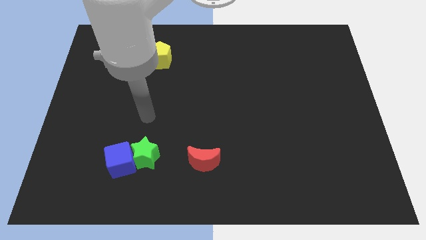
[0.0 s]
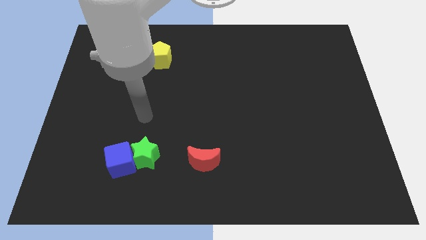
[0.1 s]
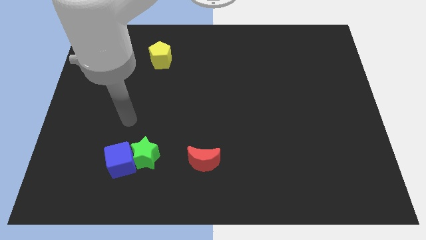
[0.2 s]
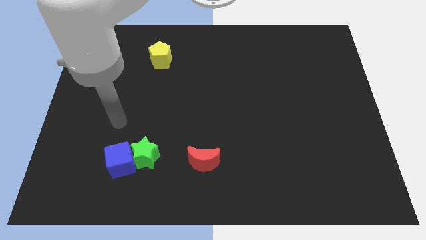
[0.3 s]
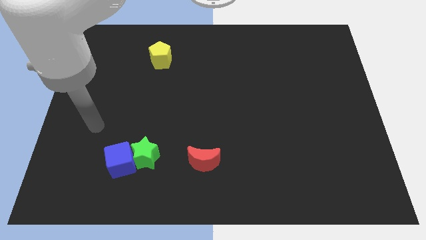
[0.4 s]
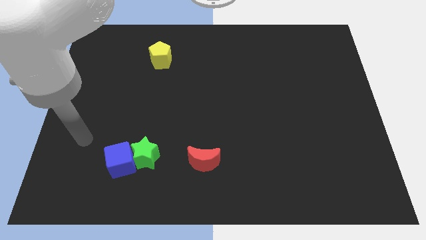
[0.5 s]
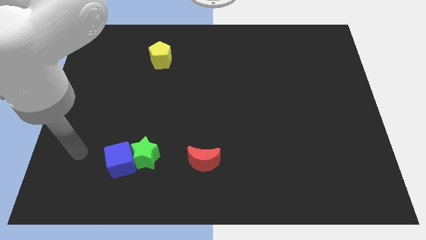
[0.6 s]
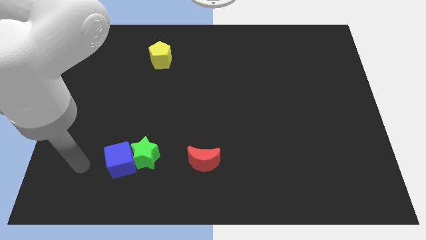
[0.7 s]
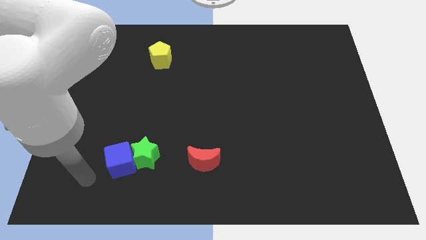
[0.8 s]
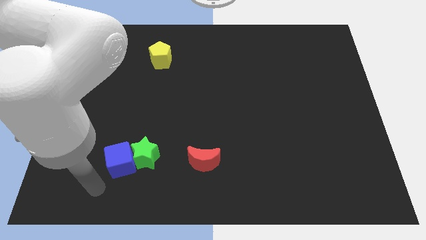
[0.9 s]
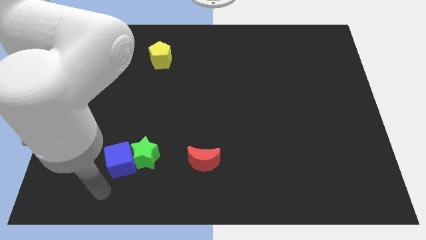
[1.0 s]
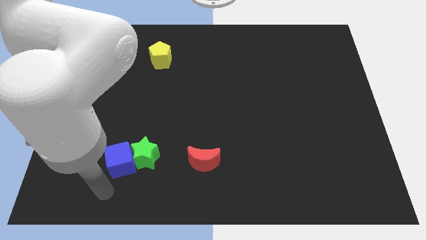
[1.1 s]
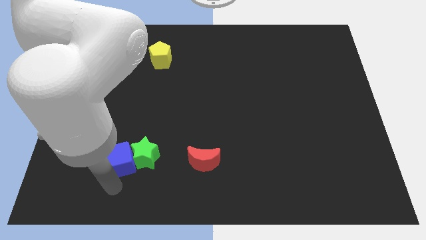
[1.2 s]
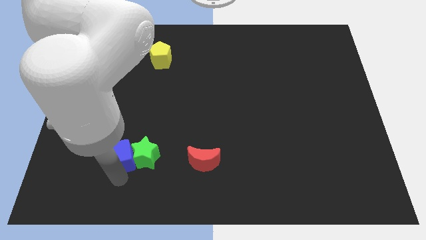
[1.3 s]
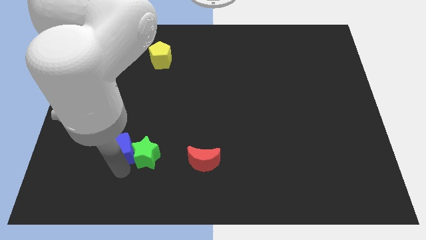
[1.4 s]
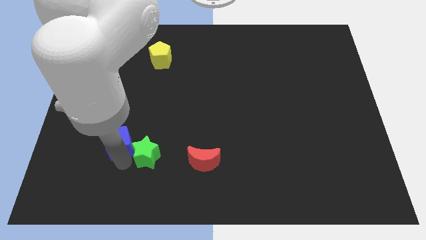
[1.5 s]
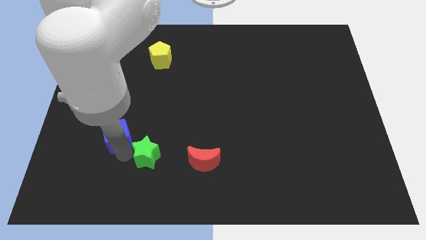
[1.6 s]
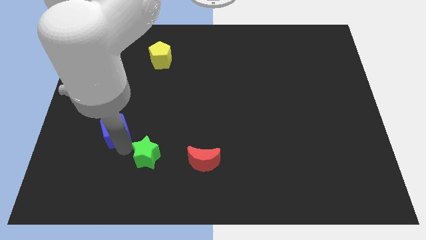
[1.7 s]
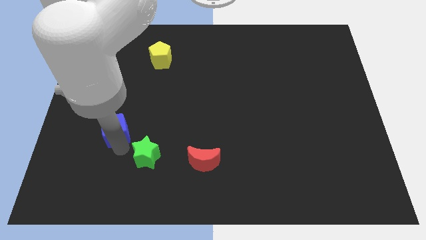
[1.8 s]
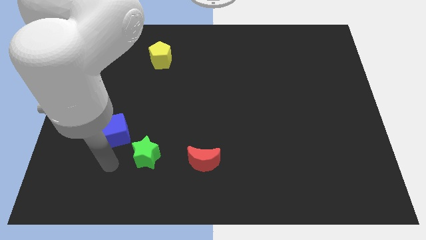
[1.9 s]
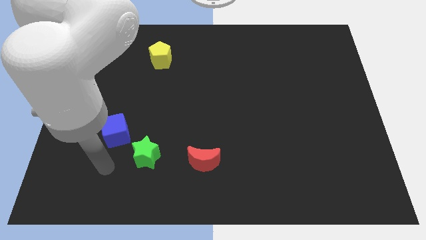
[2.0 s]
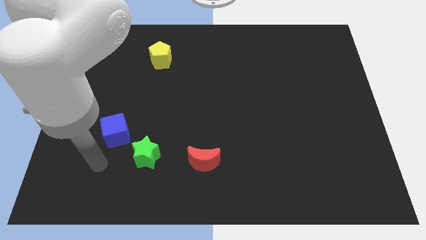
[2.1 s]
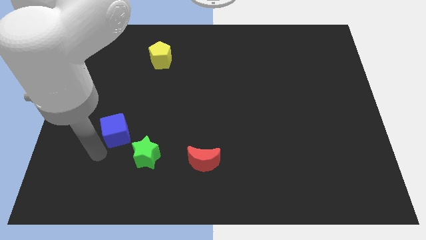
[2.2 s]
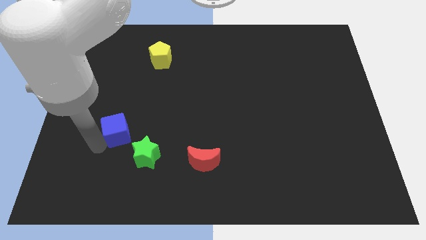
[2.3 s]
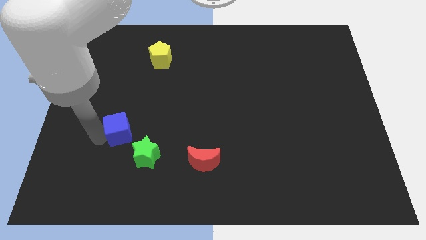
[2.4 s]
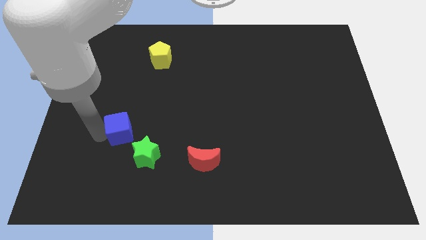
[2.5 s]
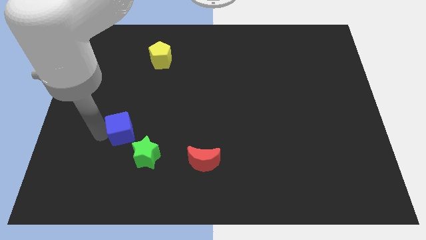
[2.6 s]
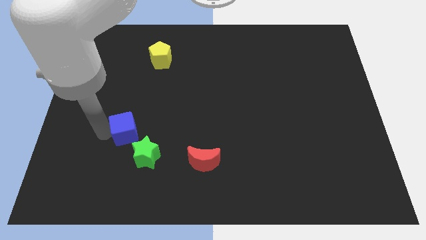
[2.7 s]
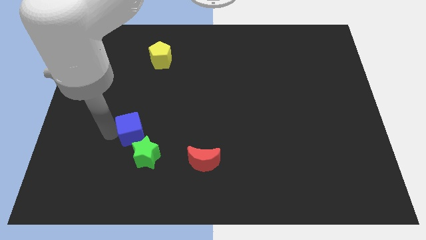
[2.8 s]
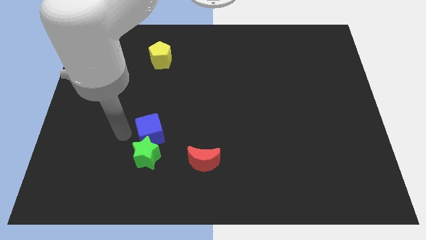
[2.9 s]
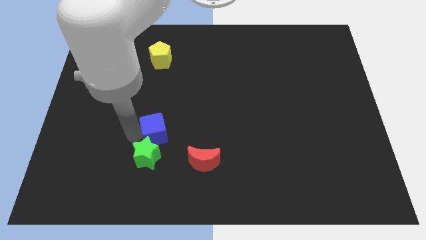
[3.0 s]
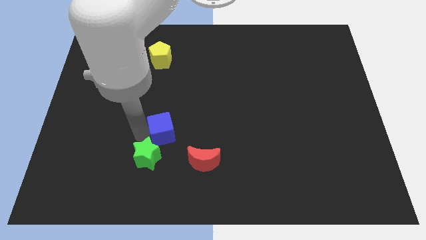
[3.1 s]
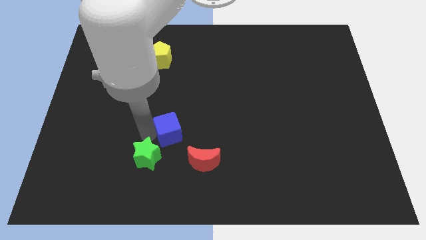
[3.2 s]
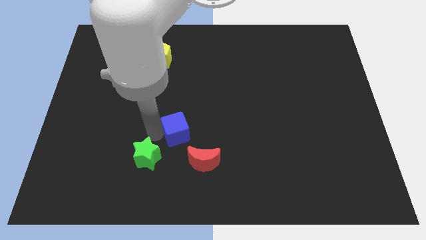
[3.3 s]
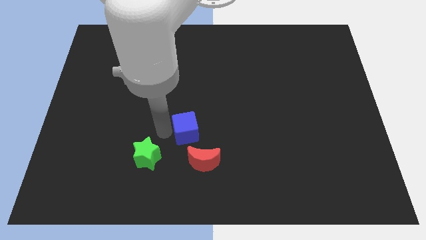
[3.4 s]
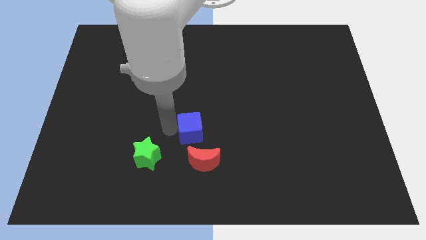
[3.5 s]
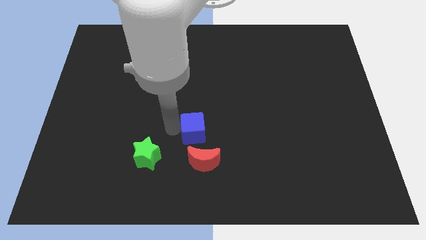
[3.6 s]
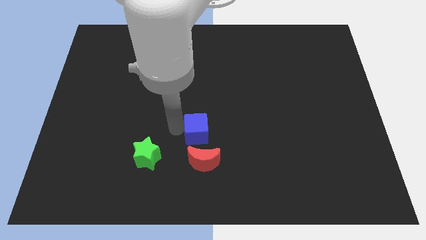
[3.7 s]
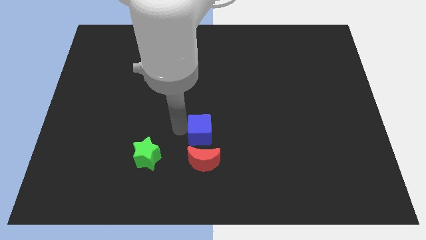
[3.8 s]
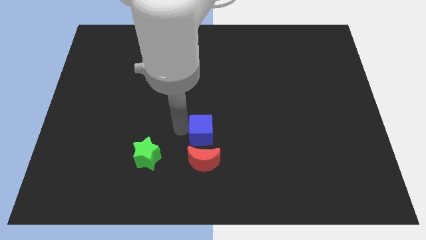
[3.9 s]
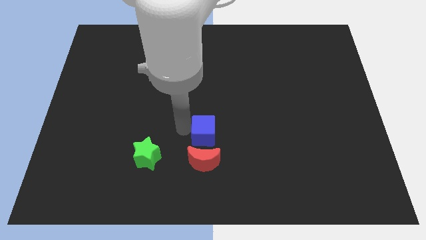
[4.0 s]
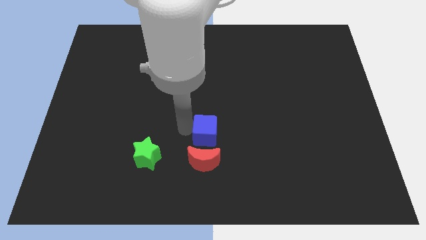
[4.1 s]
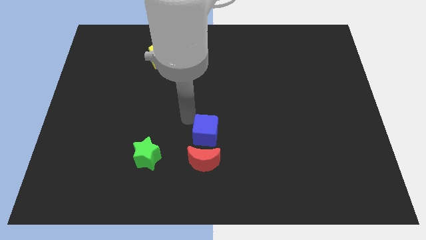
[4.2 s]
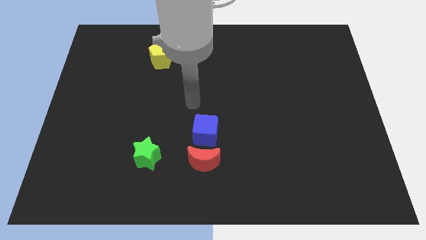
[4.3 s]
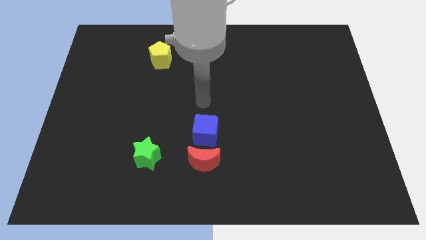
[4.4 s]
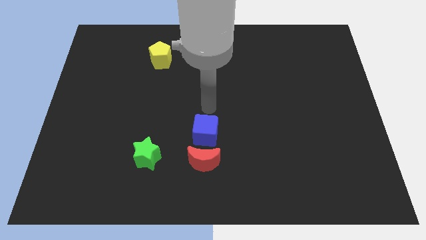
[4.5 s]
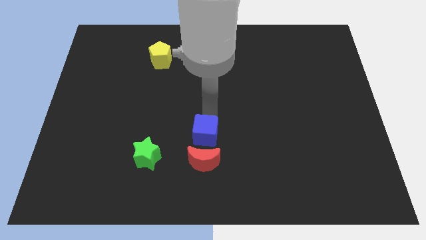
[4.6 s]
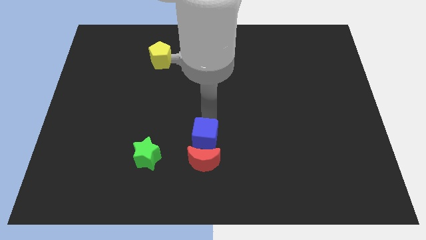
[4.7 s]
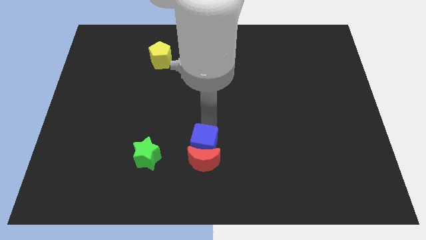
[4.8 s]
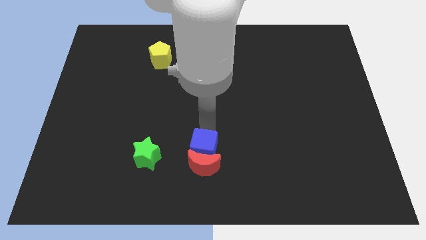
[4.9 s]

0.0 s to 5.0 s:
move the blue cube next to the red moon

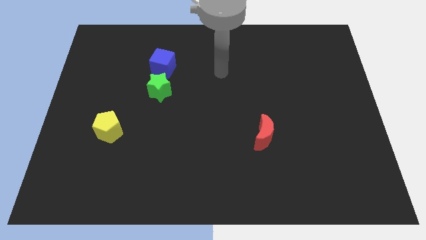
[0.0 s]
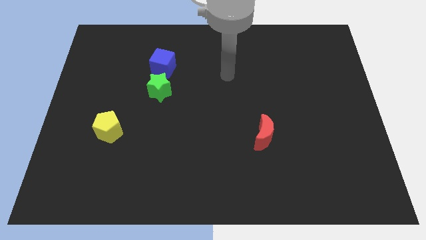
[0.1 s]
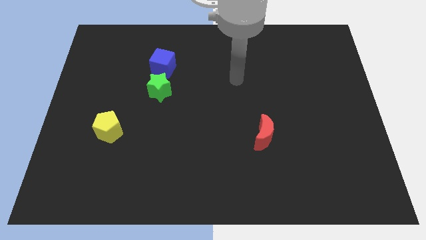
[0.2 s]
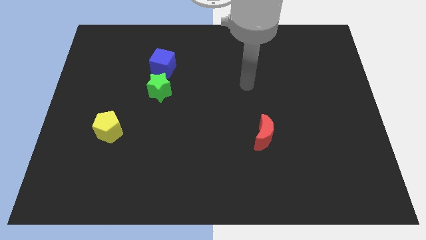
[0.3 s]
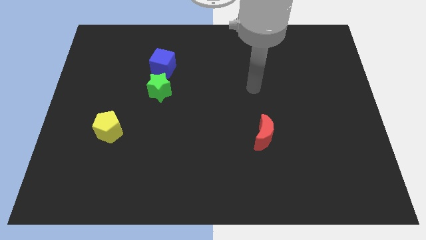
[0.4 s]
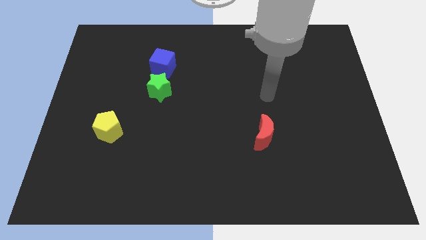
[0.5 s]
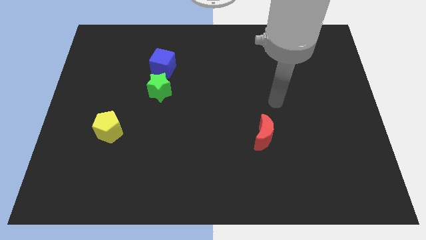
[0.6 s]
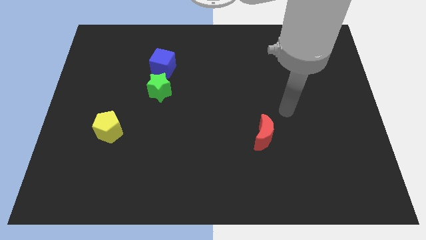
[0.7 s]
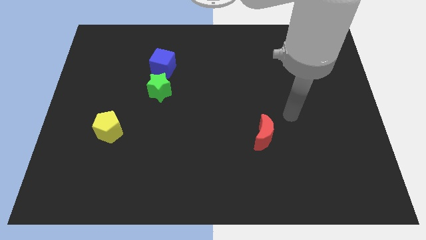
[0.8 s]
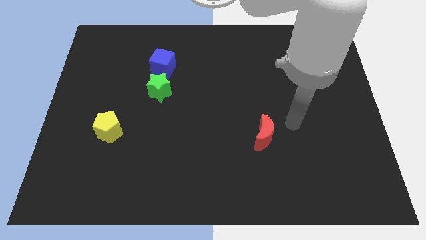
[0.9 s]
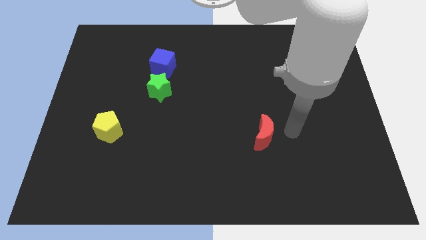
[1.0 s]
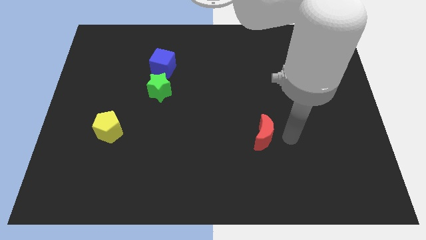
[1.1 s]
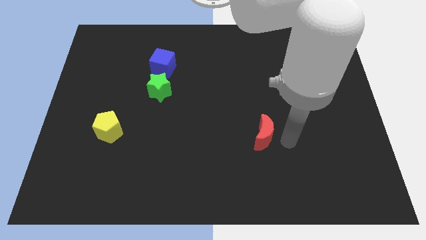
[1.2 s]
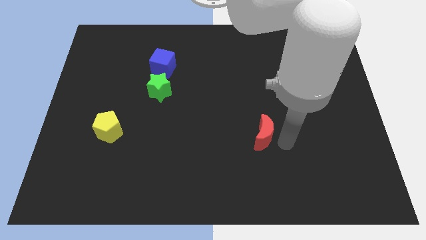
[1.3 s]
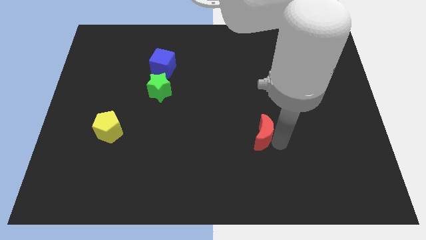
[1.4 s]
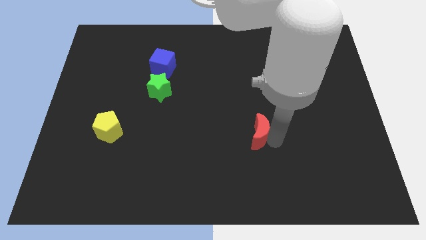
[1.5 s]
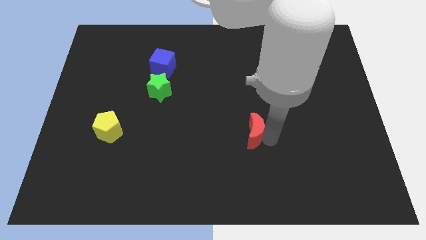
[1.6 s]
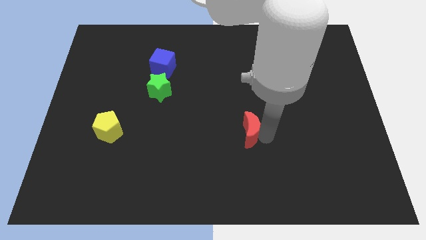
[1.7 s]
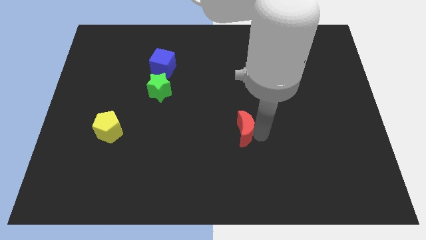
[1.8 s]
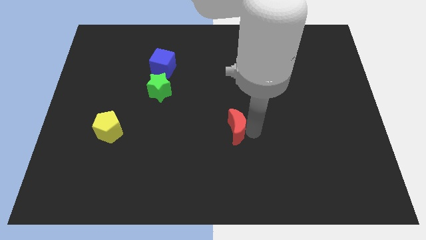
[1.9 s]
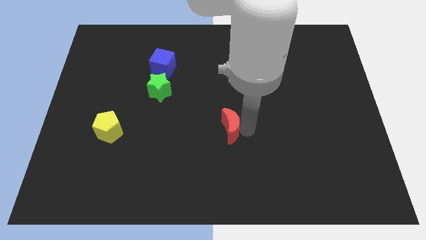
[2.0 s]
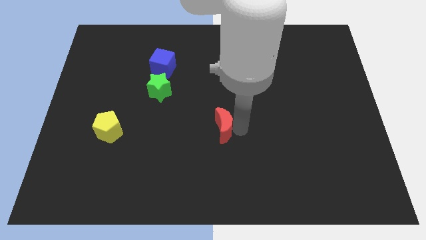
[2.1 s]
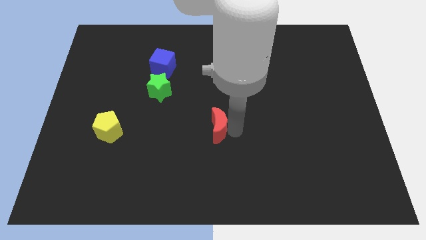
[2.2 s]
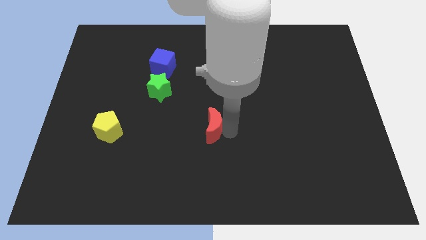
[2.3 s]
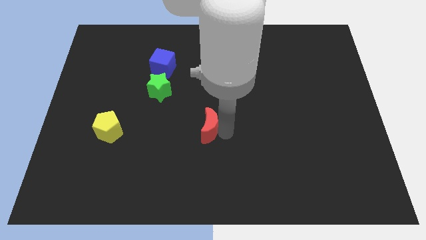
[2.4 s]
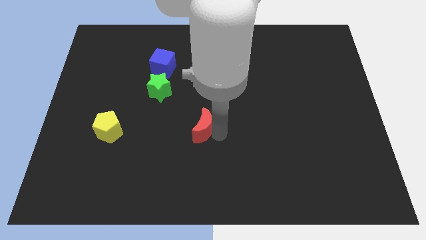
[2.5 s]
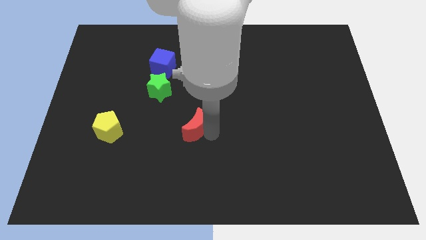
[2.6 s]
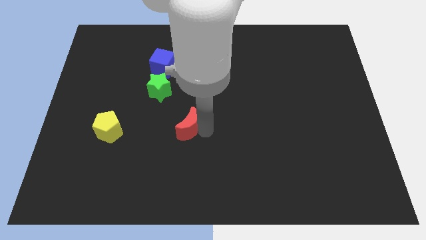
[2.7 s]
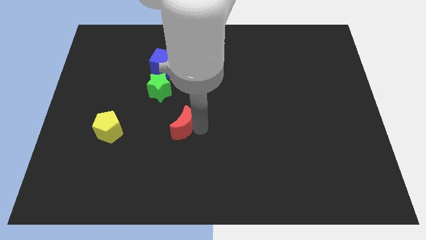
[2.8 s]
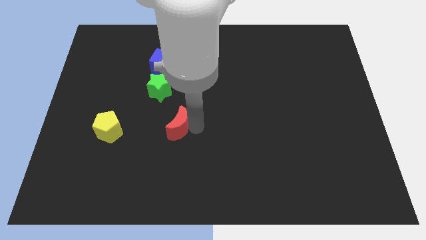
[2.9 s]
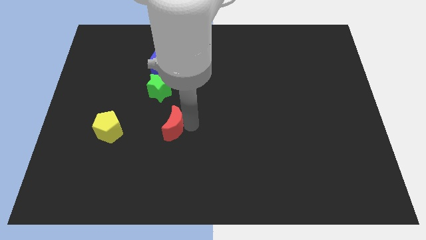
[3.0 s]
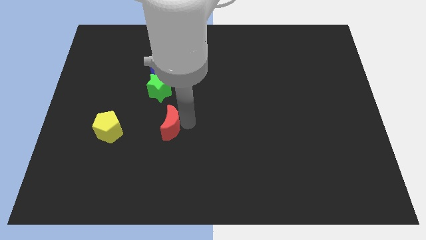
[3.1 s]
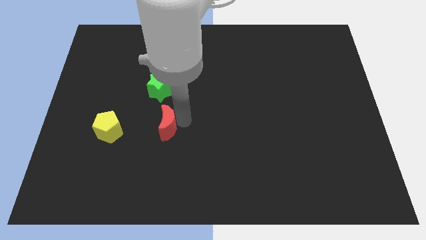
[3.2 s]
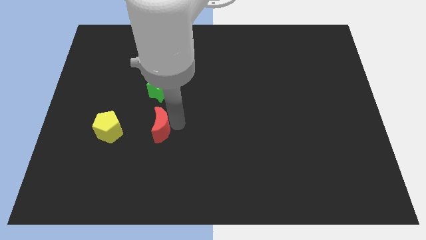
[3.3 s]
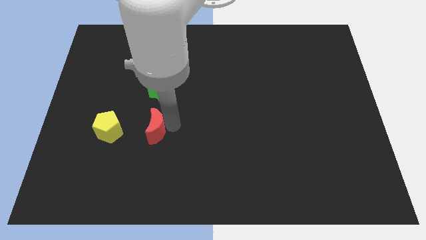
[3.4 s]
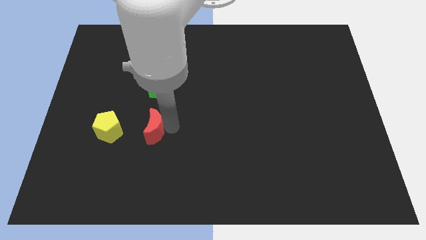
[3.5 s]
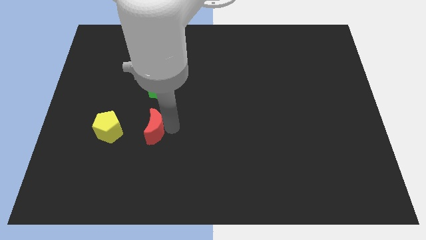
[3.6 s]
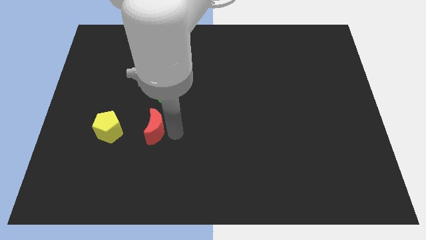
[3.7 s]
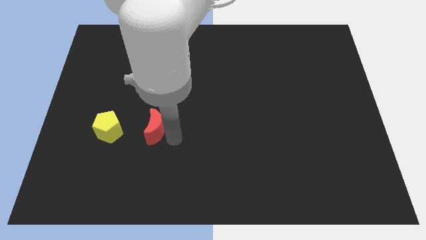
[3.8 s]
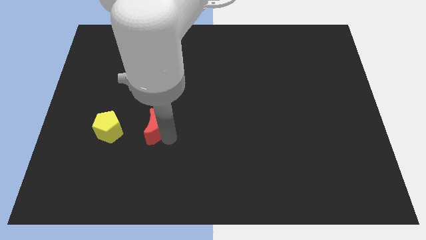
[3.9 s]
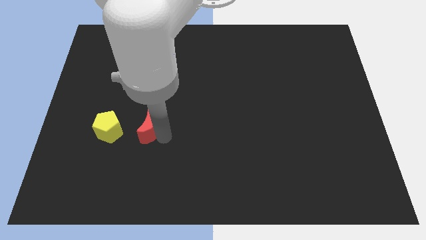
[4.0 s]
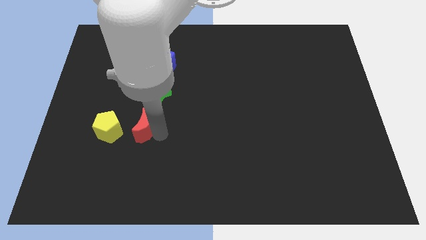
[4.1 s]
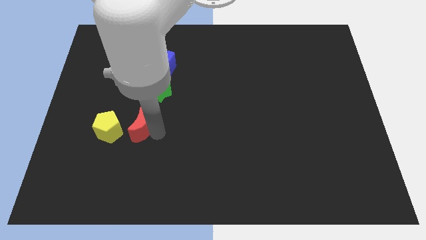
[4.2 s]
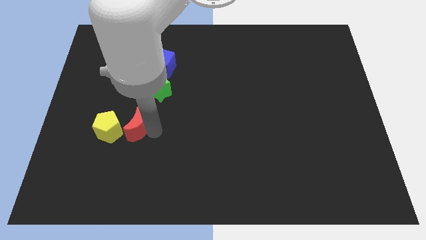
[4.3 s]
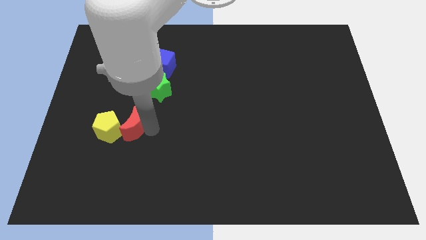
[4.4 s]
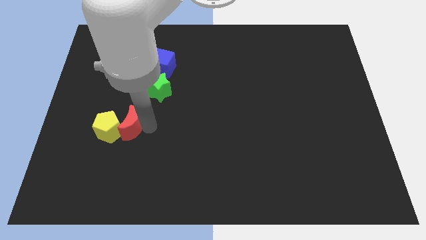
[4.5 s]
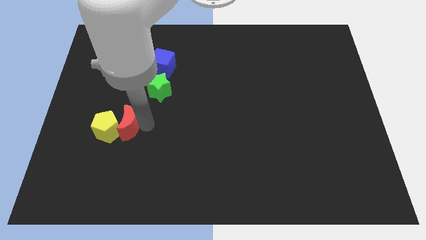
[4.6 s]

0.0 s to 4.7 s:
put the red moon next to the pentagon
